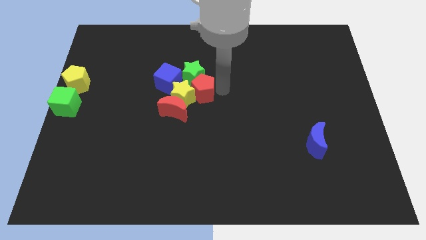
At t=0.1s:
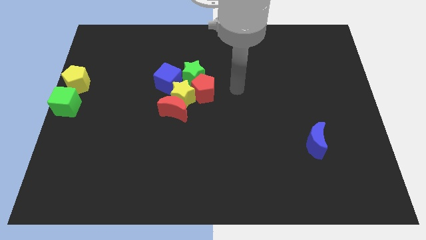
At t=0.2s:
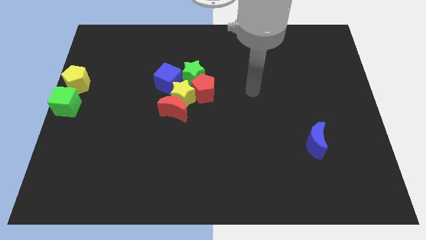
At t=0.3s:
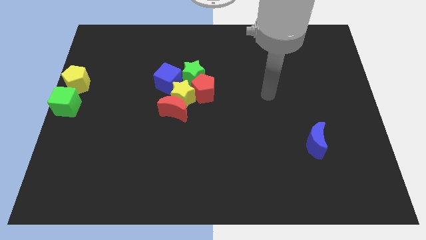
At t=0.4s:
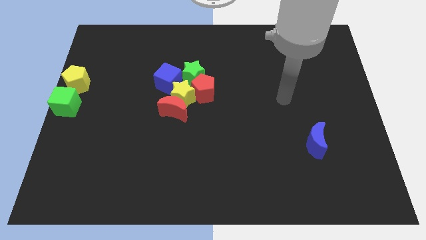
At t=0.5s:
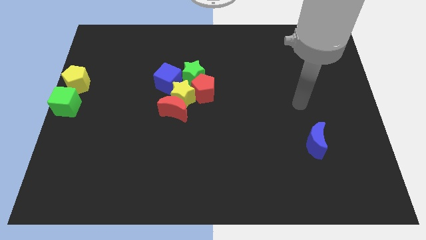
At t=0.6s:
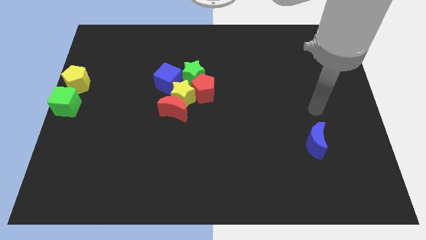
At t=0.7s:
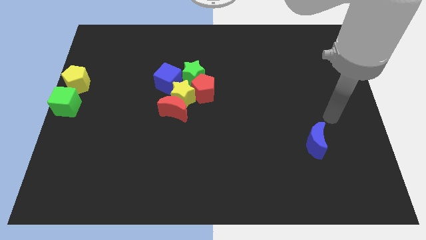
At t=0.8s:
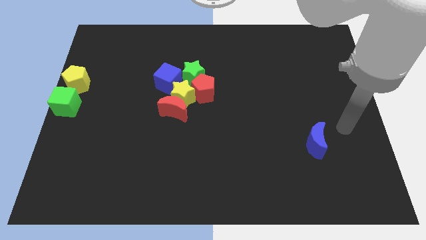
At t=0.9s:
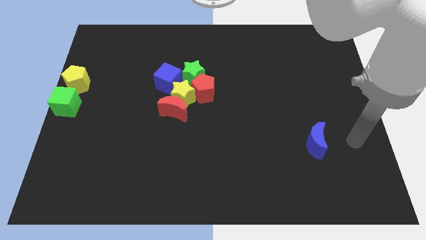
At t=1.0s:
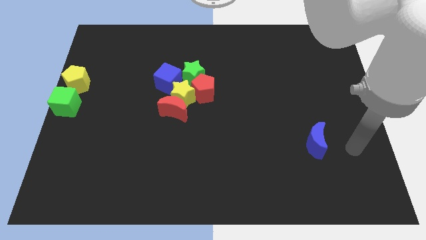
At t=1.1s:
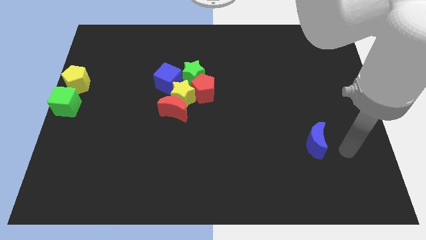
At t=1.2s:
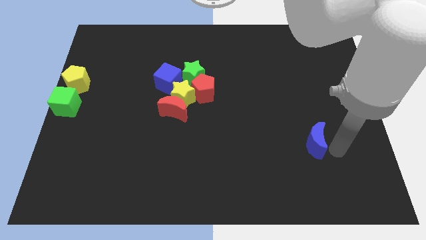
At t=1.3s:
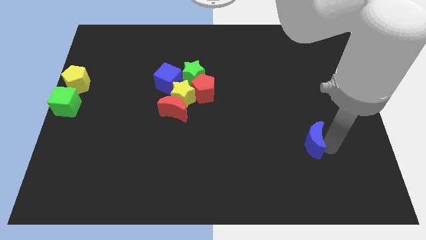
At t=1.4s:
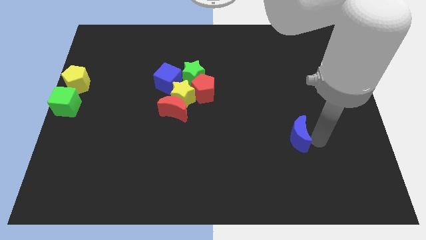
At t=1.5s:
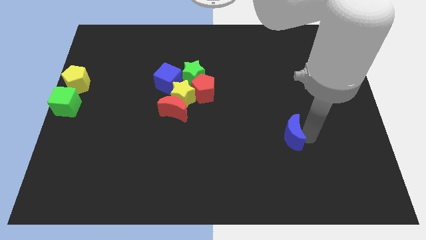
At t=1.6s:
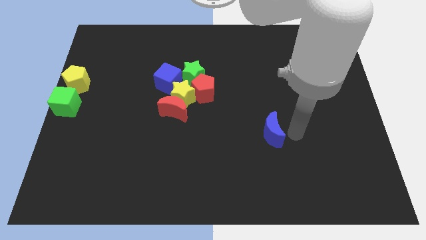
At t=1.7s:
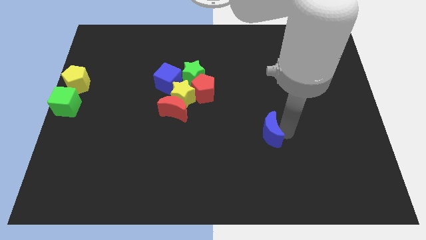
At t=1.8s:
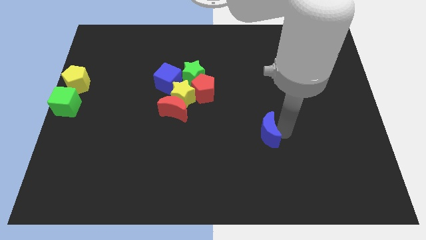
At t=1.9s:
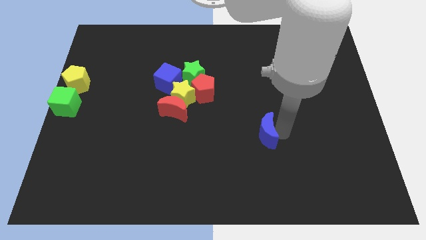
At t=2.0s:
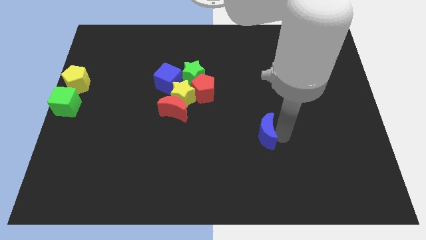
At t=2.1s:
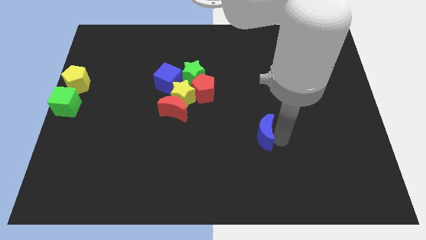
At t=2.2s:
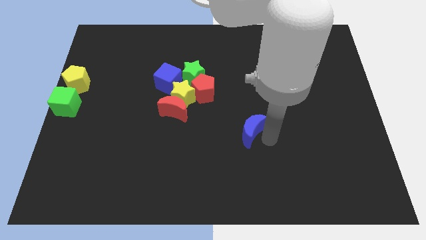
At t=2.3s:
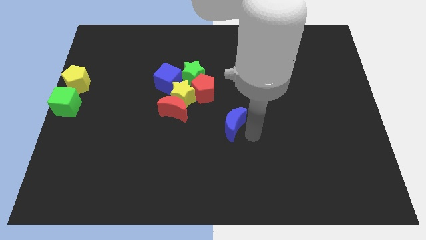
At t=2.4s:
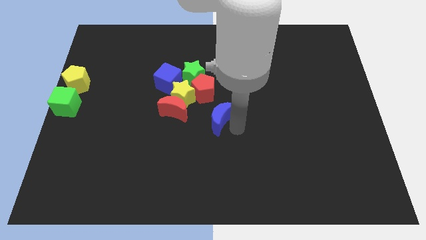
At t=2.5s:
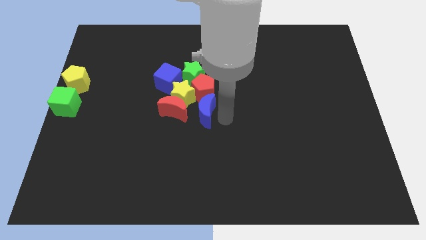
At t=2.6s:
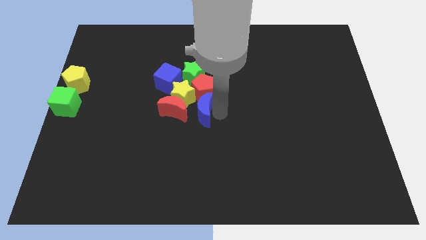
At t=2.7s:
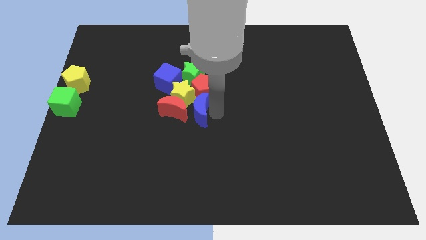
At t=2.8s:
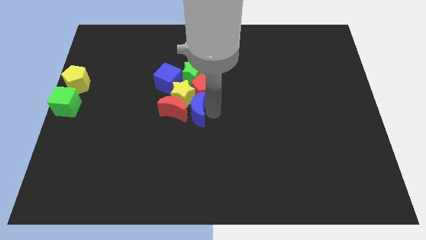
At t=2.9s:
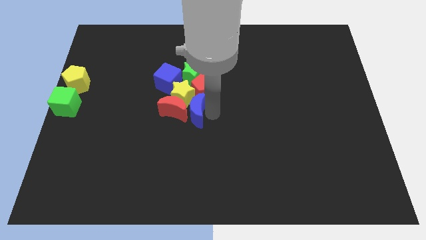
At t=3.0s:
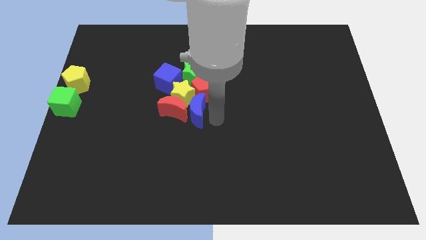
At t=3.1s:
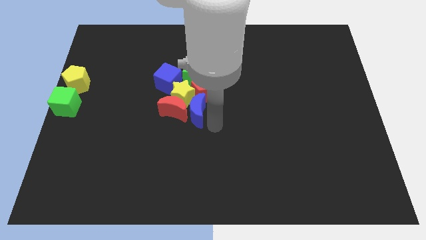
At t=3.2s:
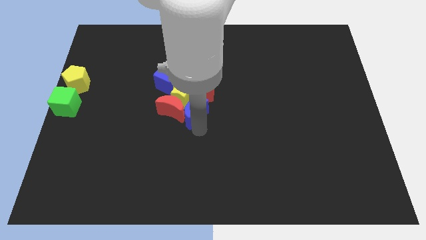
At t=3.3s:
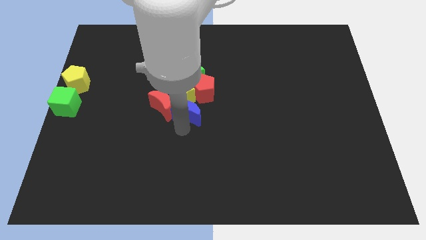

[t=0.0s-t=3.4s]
move the blue moon to the bottom of yellow star

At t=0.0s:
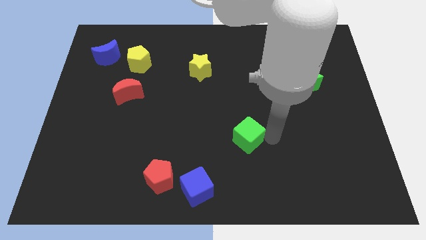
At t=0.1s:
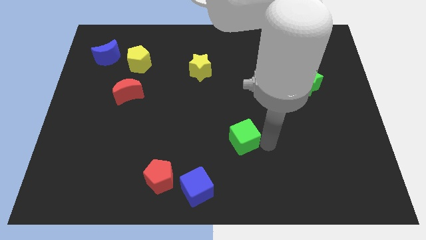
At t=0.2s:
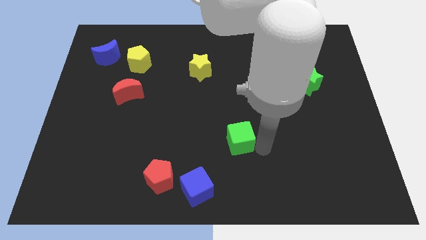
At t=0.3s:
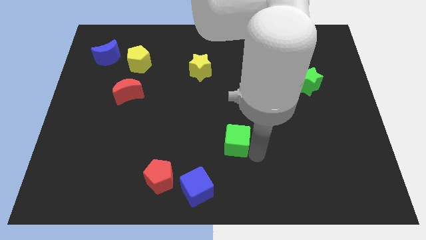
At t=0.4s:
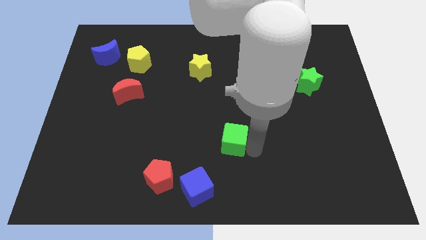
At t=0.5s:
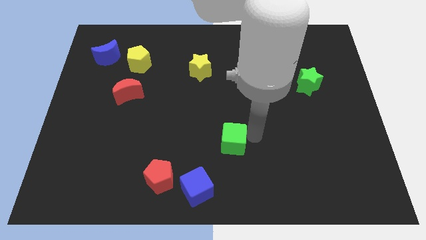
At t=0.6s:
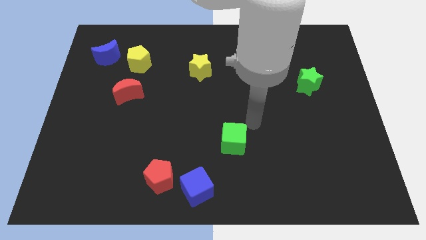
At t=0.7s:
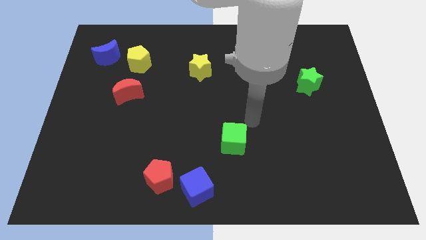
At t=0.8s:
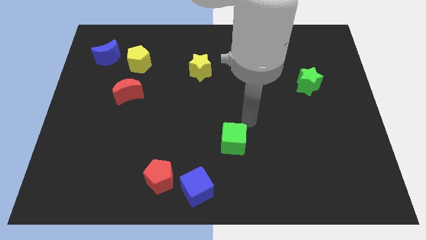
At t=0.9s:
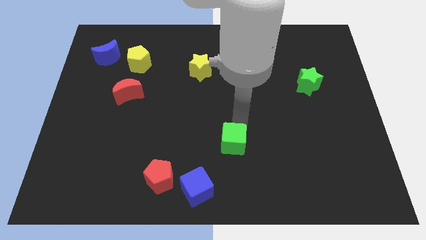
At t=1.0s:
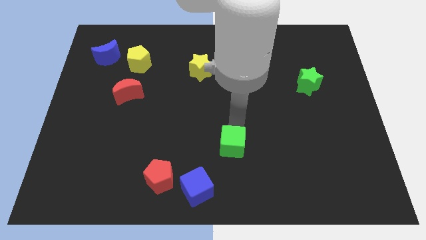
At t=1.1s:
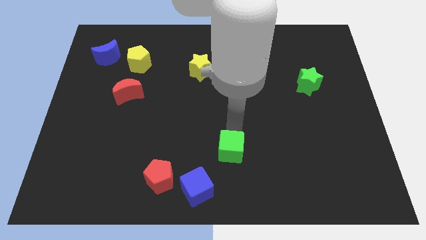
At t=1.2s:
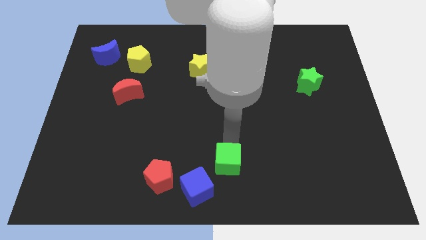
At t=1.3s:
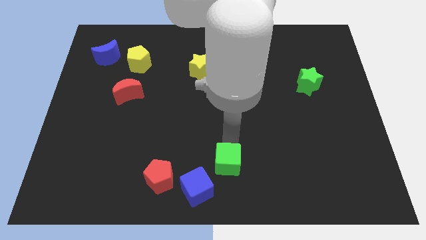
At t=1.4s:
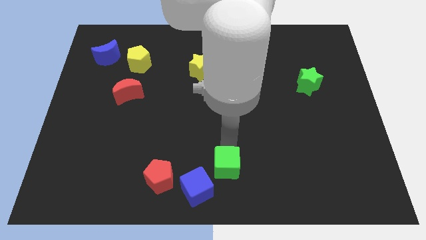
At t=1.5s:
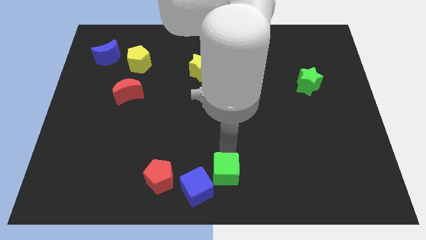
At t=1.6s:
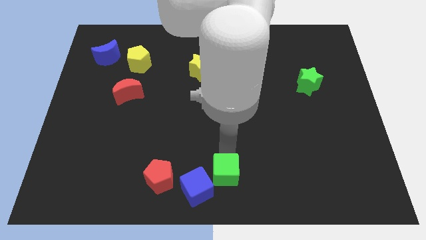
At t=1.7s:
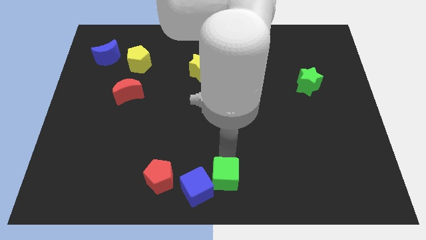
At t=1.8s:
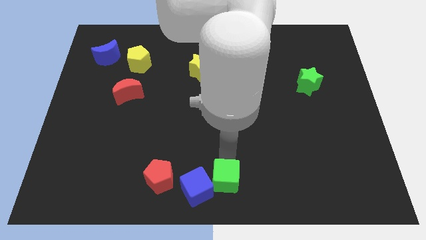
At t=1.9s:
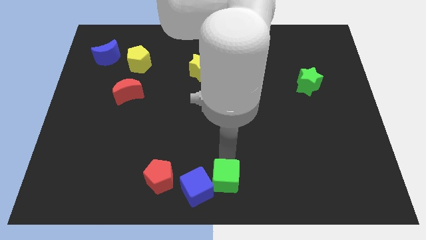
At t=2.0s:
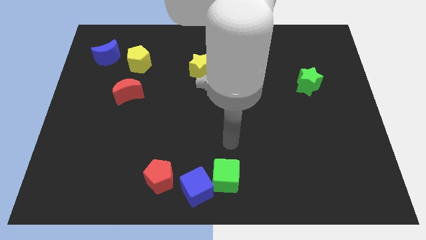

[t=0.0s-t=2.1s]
push the green cube right to the blue cube

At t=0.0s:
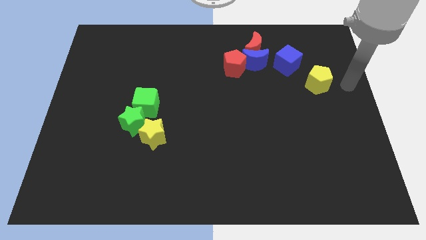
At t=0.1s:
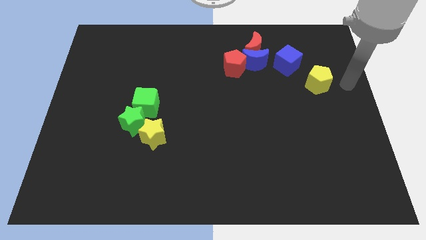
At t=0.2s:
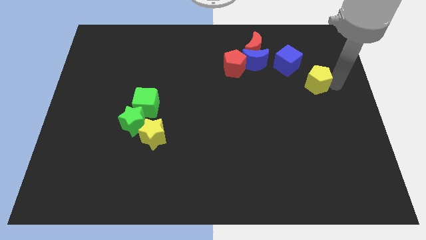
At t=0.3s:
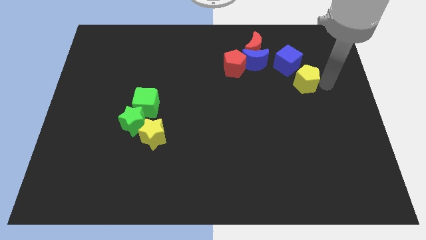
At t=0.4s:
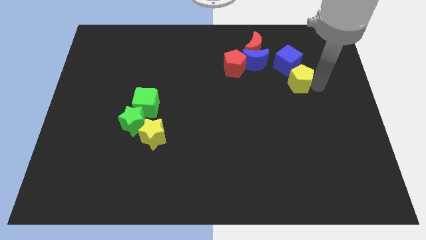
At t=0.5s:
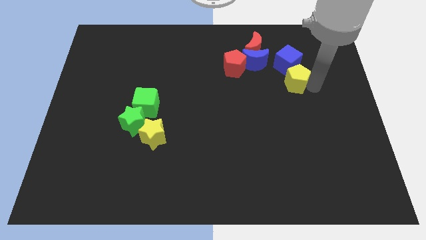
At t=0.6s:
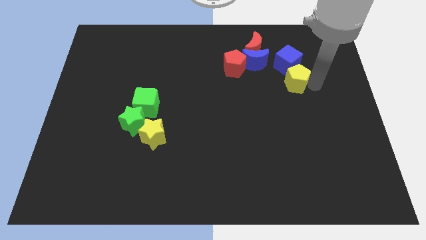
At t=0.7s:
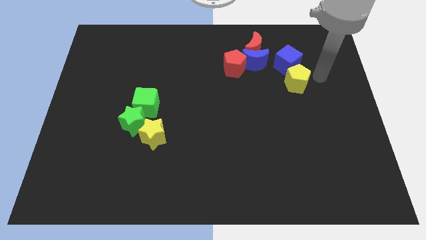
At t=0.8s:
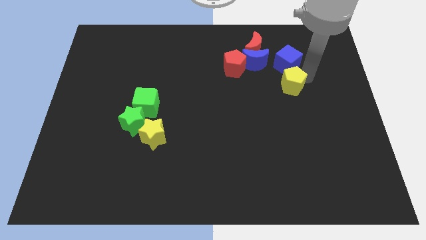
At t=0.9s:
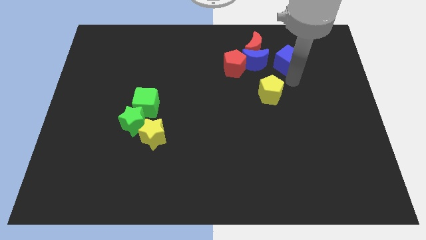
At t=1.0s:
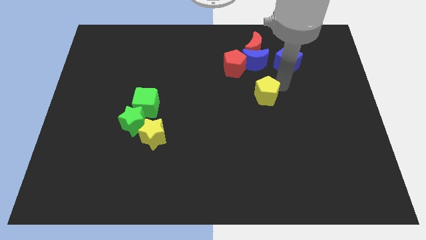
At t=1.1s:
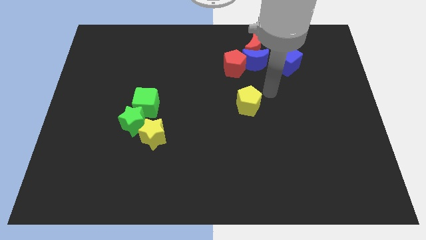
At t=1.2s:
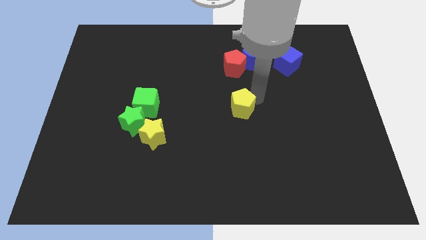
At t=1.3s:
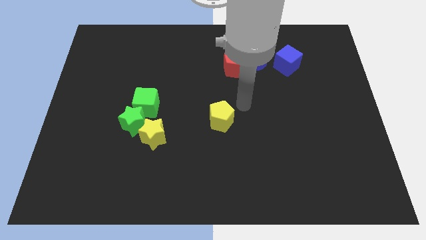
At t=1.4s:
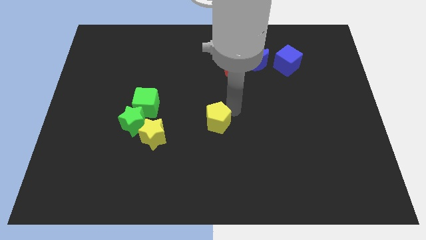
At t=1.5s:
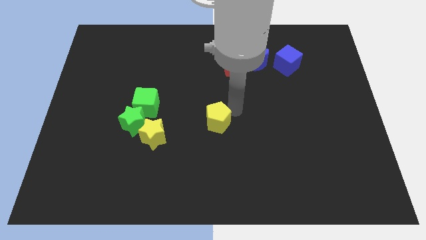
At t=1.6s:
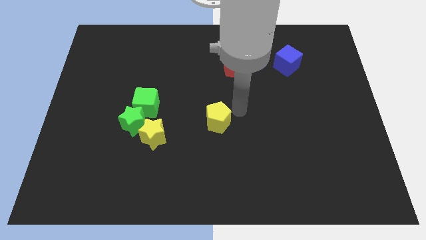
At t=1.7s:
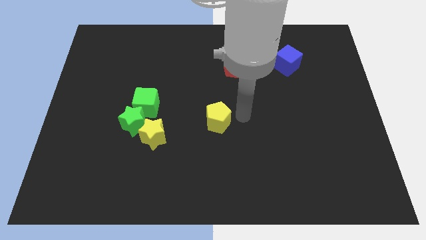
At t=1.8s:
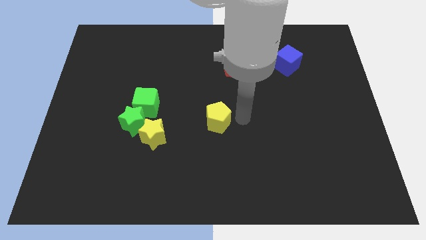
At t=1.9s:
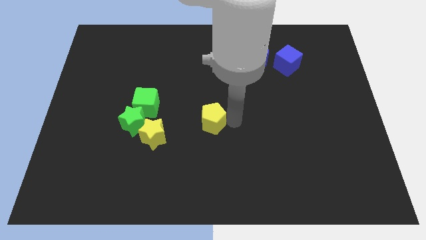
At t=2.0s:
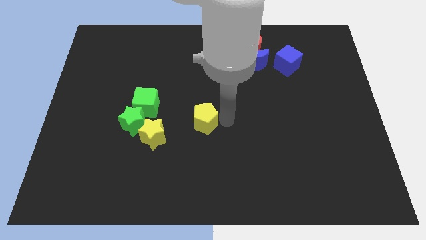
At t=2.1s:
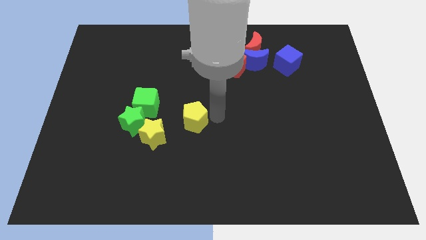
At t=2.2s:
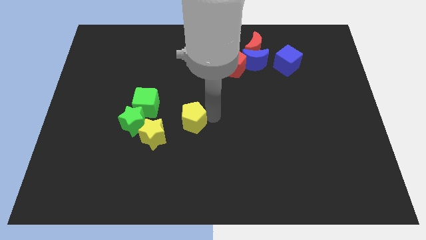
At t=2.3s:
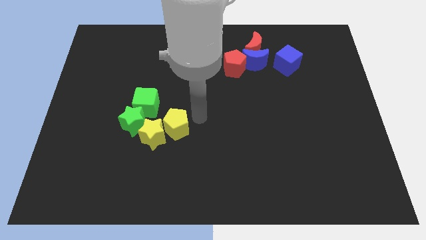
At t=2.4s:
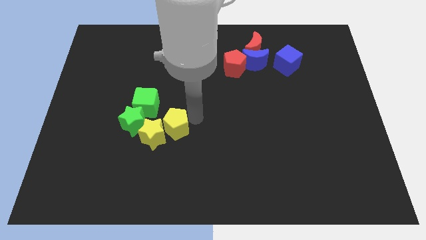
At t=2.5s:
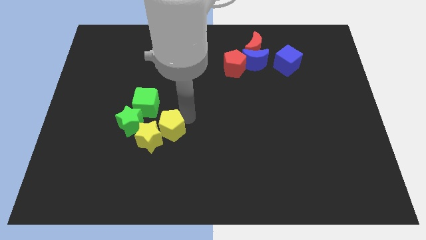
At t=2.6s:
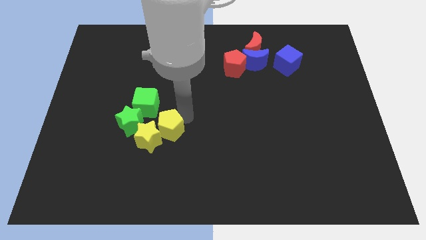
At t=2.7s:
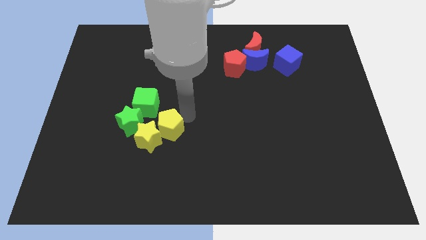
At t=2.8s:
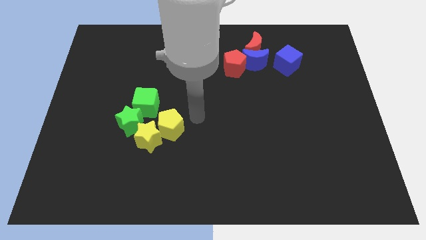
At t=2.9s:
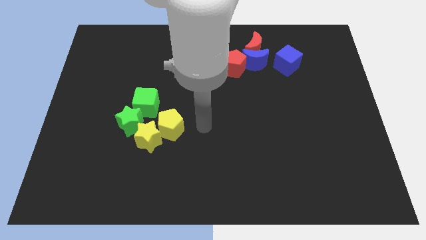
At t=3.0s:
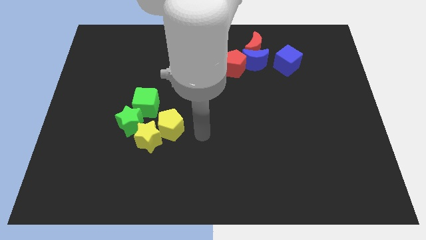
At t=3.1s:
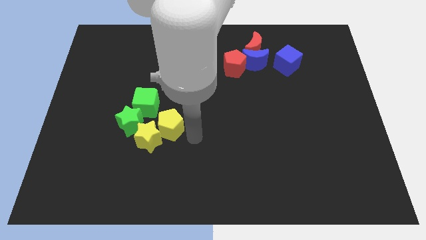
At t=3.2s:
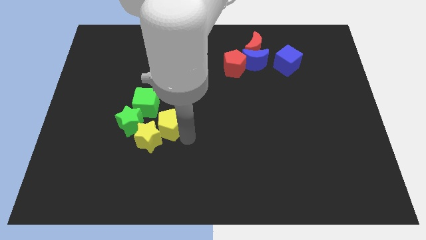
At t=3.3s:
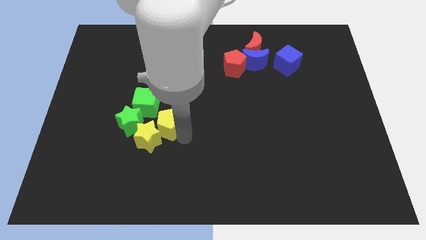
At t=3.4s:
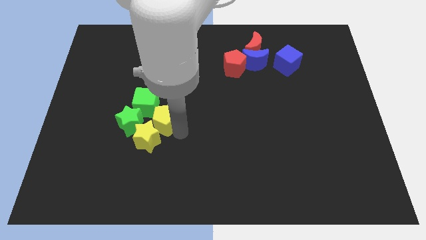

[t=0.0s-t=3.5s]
place the yellow pentagon into the green cube green star and yellow star
